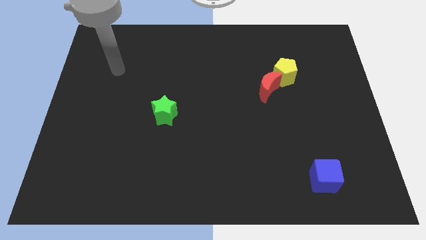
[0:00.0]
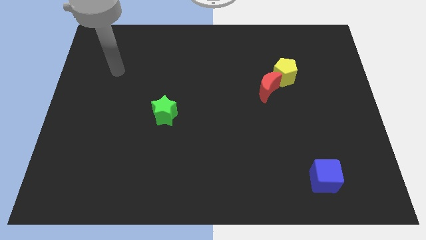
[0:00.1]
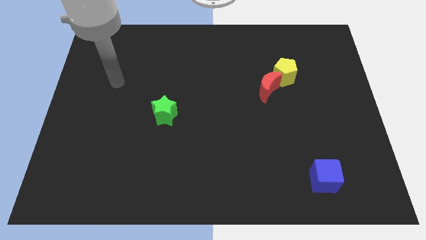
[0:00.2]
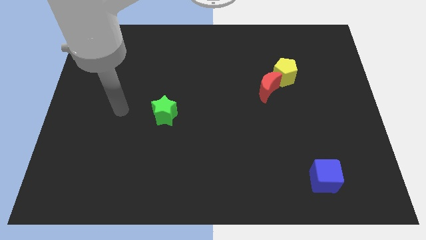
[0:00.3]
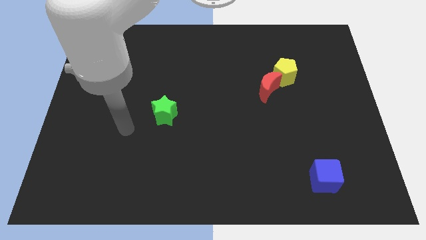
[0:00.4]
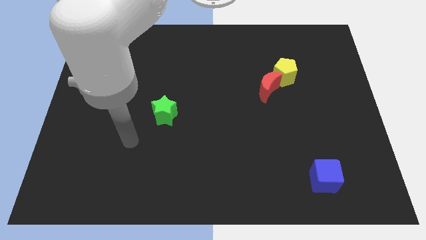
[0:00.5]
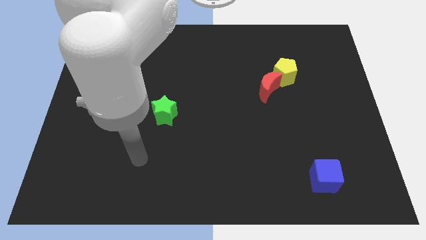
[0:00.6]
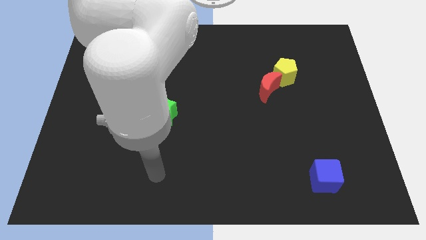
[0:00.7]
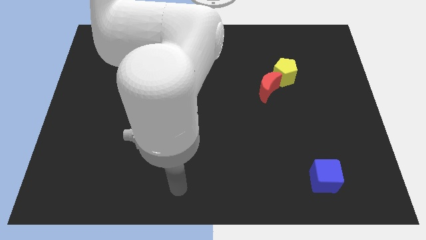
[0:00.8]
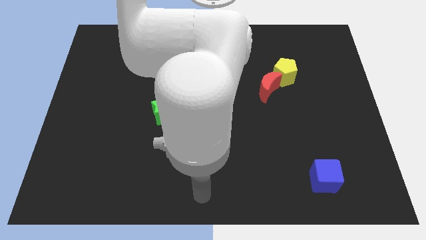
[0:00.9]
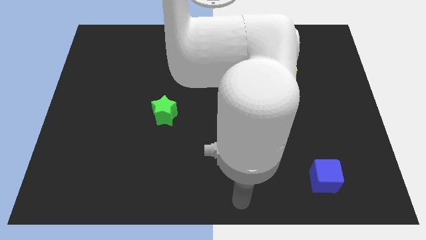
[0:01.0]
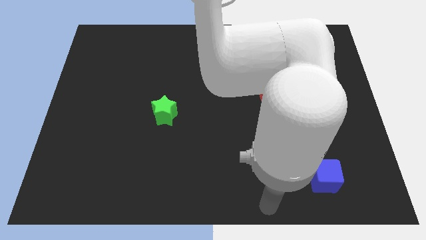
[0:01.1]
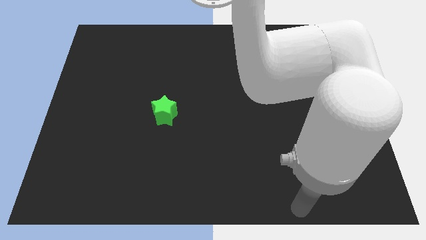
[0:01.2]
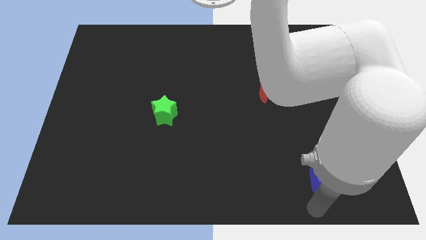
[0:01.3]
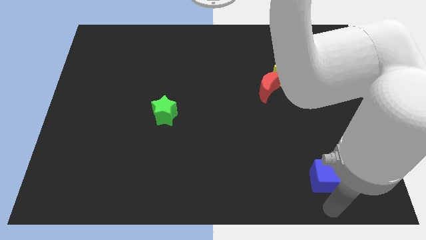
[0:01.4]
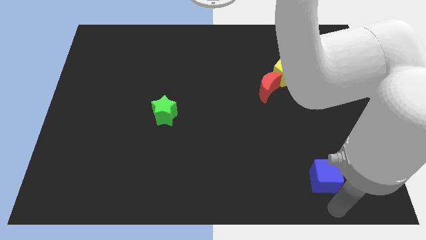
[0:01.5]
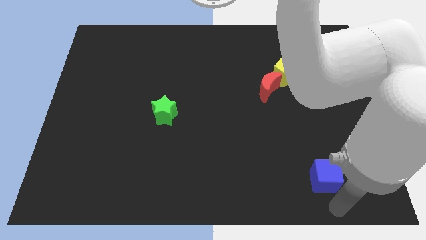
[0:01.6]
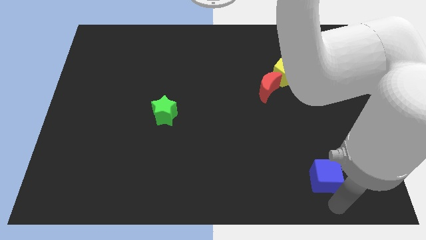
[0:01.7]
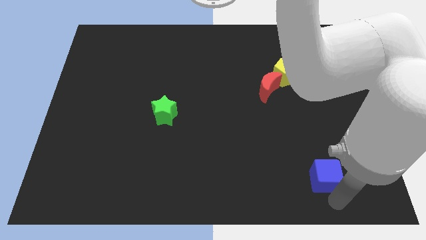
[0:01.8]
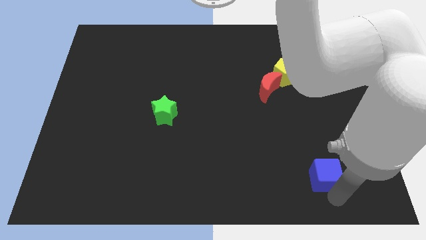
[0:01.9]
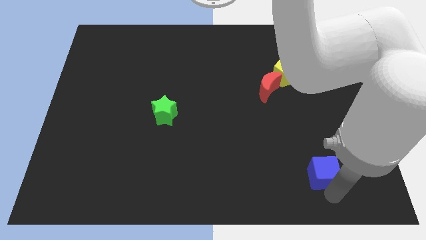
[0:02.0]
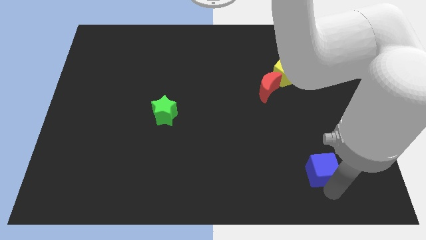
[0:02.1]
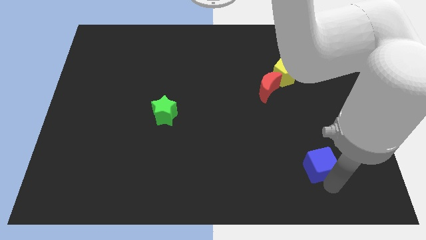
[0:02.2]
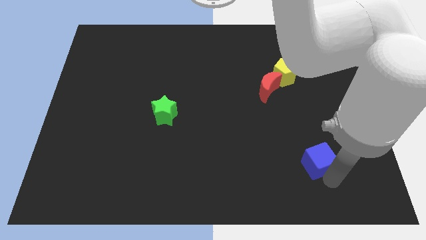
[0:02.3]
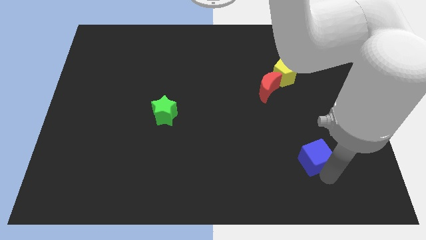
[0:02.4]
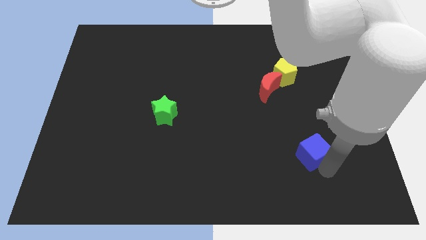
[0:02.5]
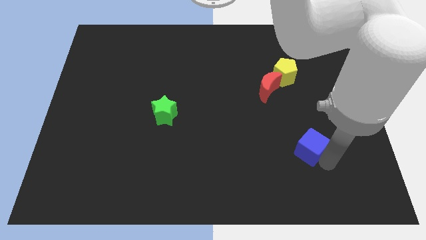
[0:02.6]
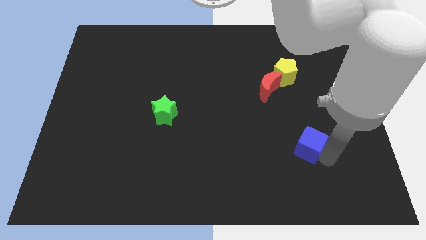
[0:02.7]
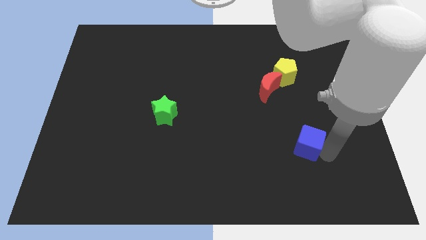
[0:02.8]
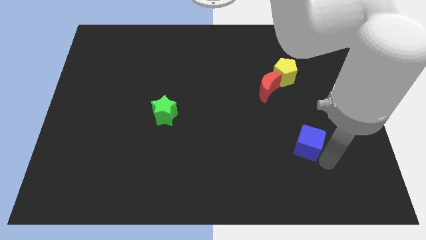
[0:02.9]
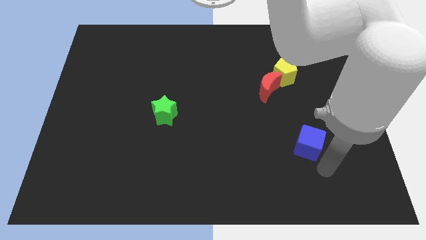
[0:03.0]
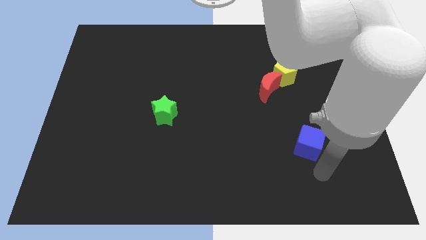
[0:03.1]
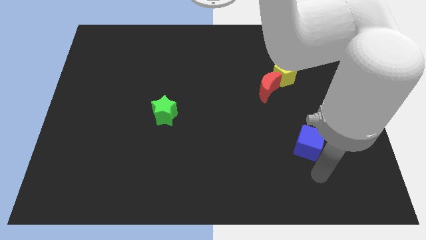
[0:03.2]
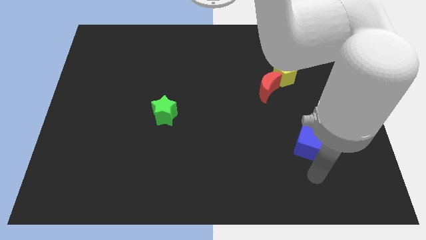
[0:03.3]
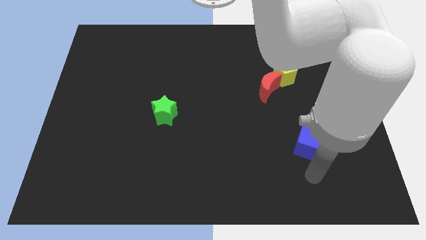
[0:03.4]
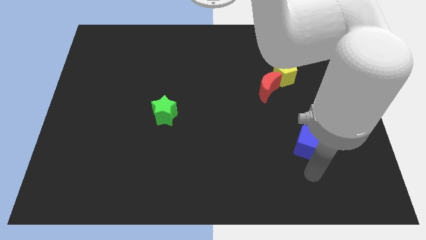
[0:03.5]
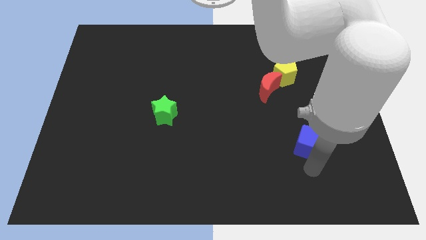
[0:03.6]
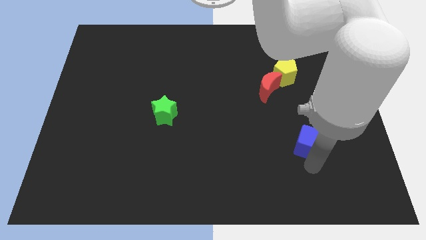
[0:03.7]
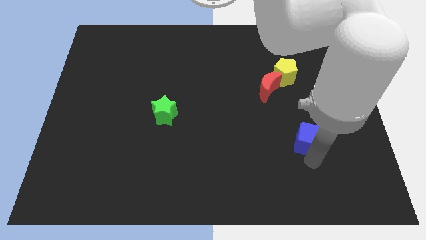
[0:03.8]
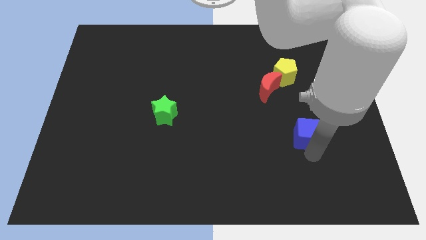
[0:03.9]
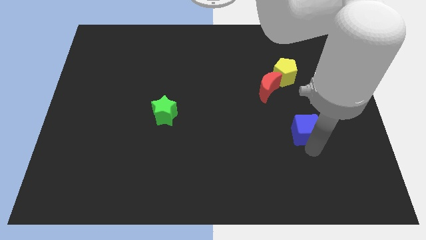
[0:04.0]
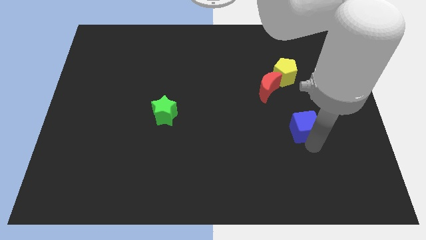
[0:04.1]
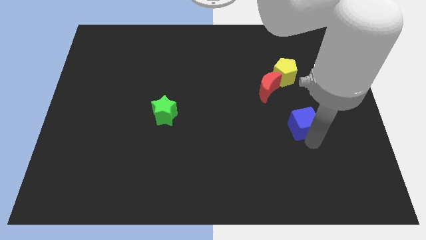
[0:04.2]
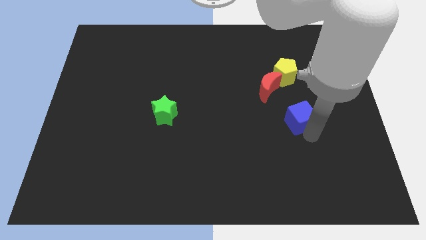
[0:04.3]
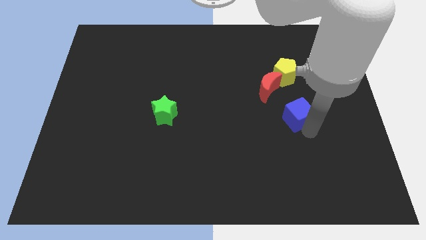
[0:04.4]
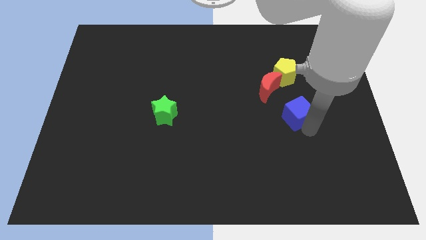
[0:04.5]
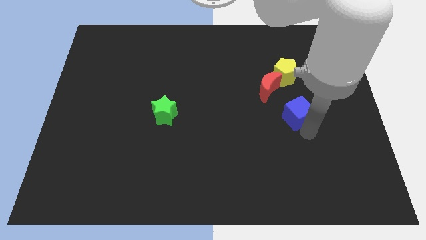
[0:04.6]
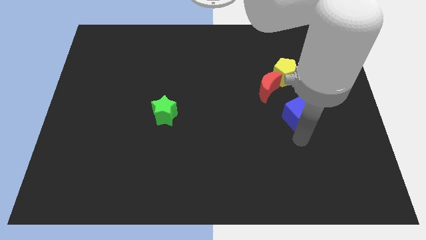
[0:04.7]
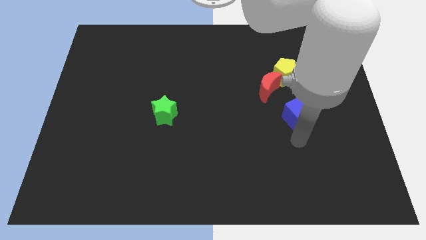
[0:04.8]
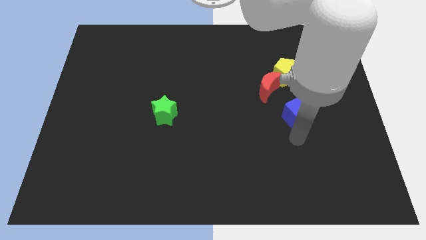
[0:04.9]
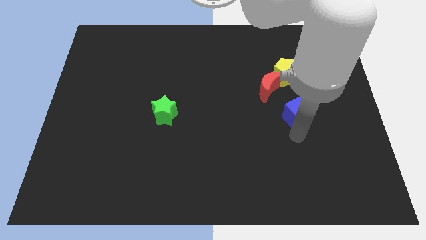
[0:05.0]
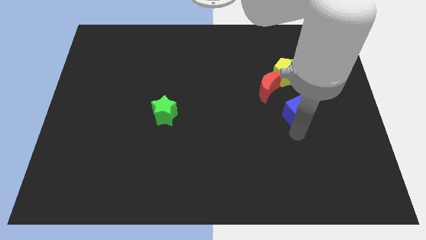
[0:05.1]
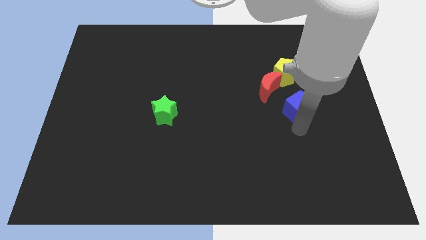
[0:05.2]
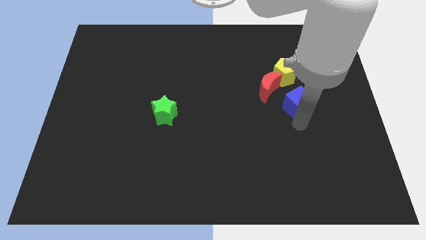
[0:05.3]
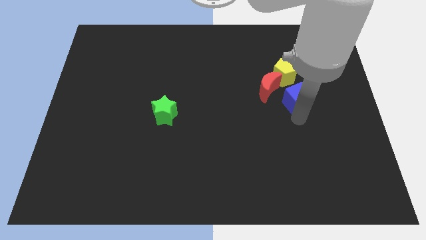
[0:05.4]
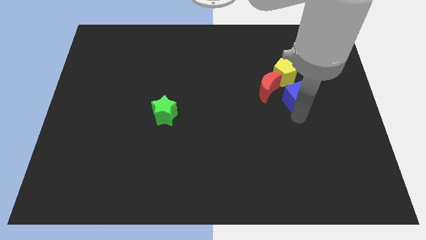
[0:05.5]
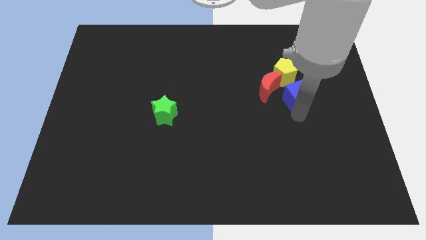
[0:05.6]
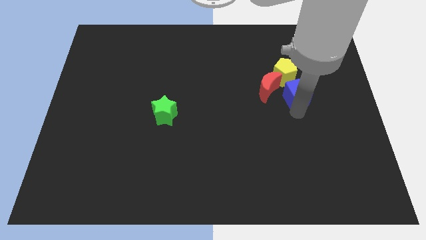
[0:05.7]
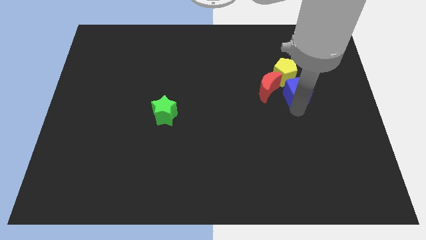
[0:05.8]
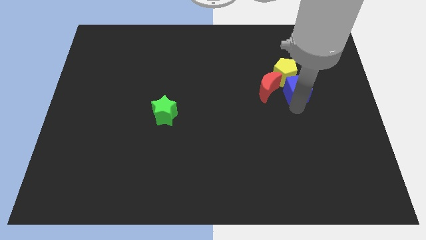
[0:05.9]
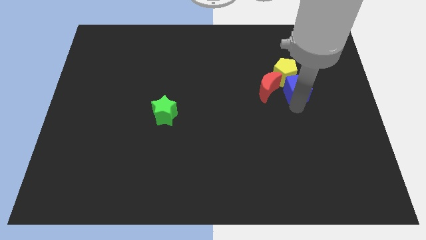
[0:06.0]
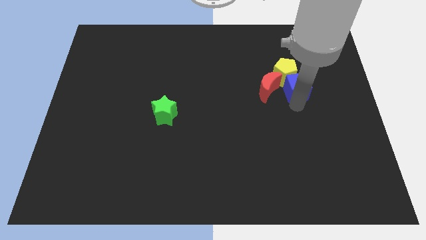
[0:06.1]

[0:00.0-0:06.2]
put the blue block next to the yellow block

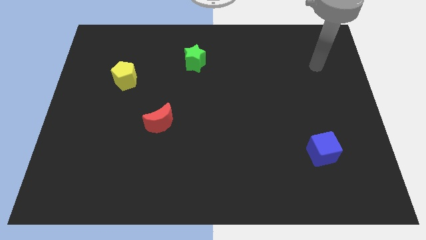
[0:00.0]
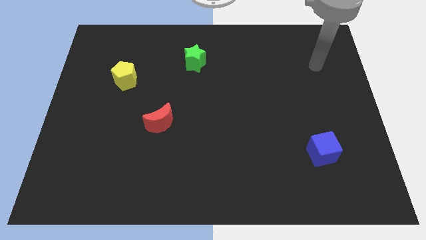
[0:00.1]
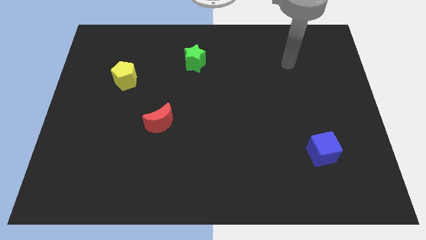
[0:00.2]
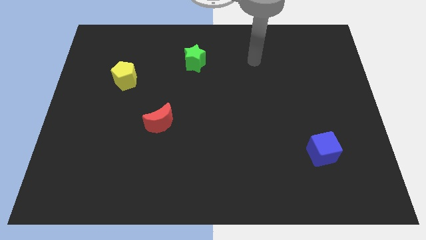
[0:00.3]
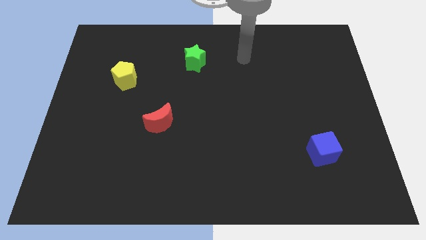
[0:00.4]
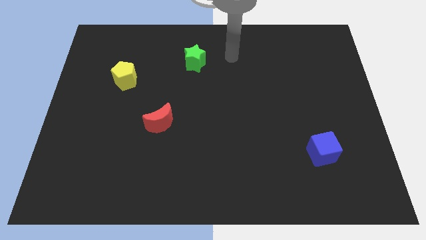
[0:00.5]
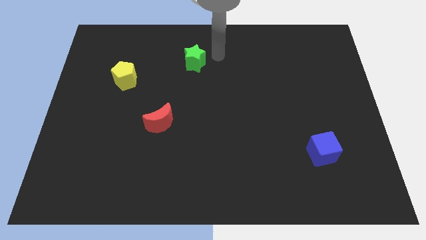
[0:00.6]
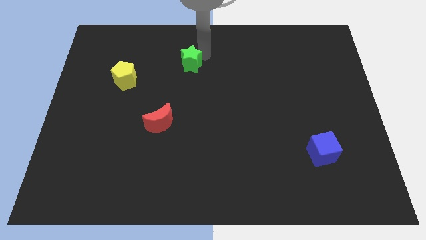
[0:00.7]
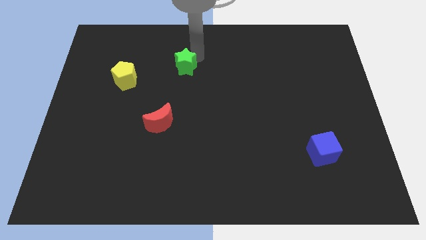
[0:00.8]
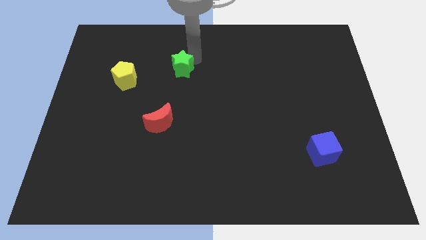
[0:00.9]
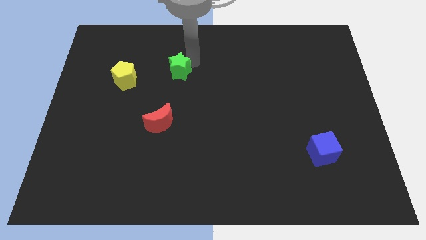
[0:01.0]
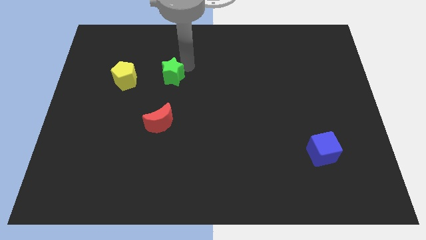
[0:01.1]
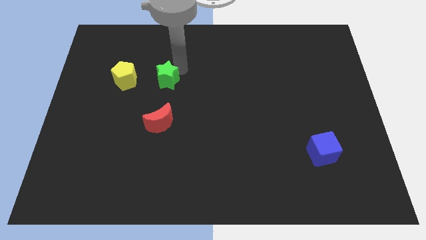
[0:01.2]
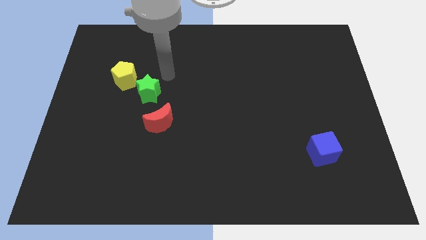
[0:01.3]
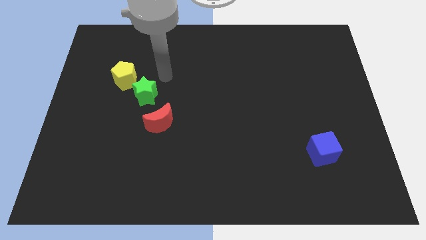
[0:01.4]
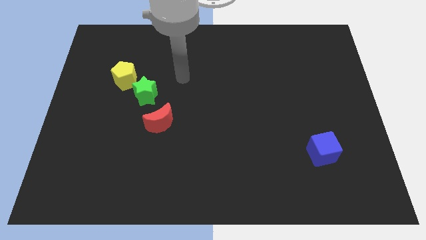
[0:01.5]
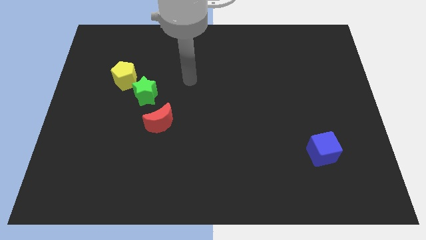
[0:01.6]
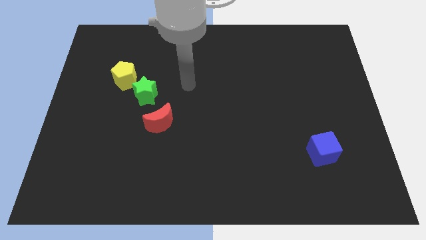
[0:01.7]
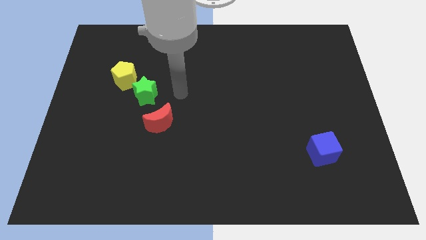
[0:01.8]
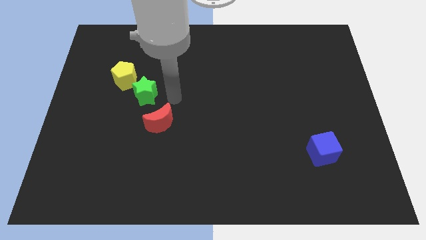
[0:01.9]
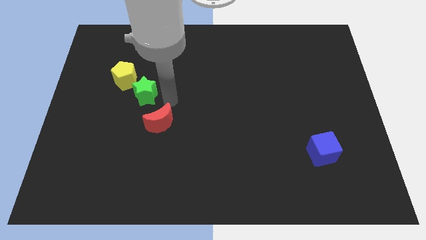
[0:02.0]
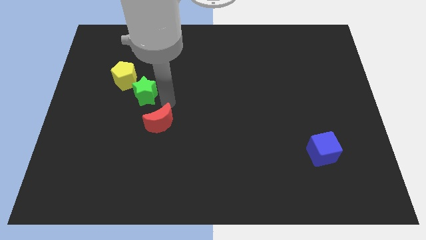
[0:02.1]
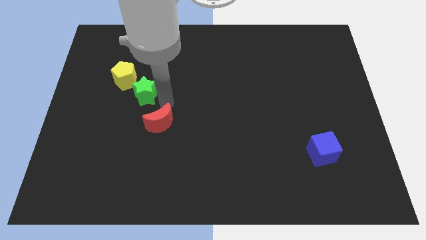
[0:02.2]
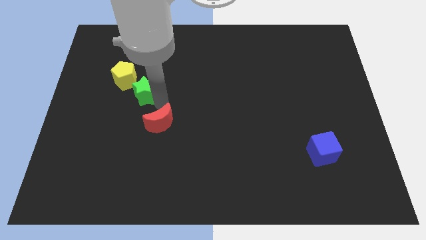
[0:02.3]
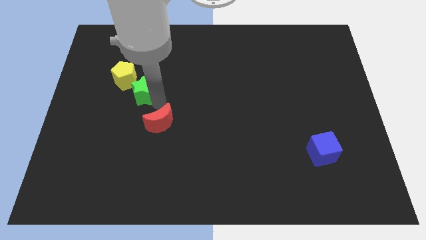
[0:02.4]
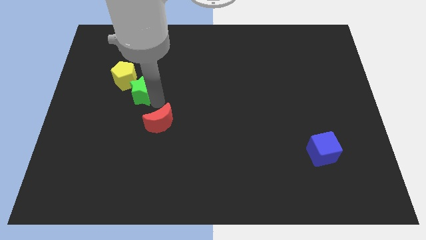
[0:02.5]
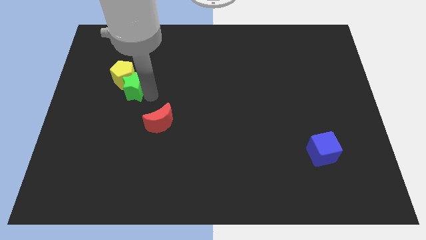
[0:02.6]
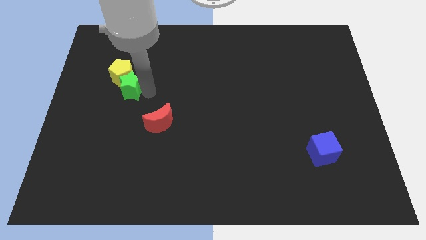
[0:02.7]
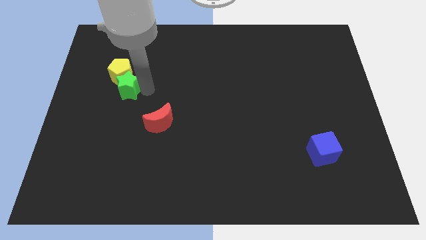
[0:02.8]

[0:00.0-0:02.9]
push the green block to the yellow block
